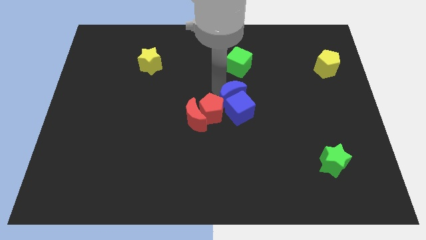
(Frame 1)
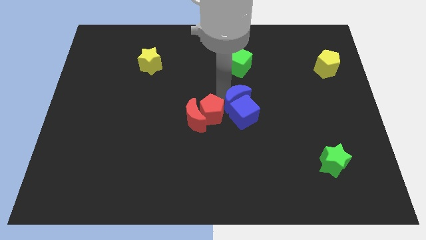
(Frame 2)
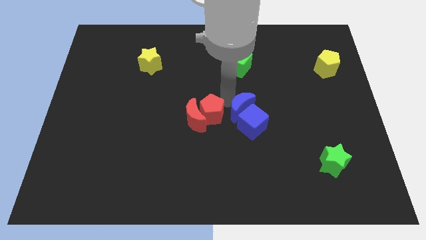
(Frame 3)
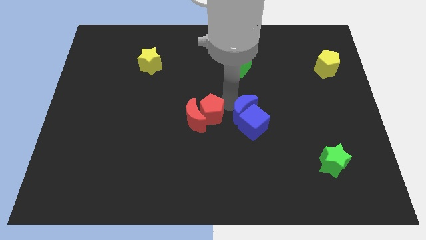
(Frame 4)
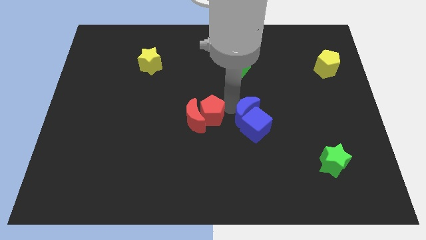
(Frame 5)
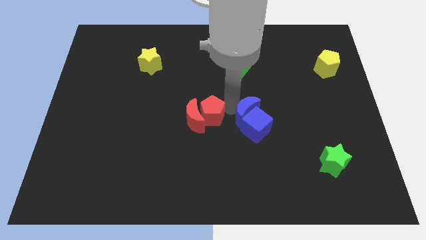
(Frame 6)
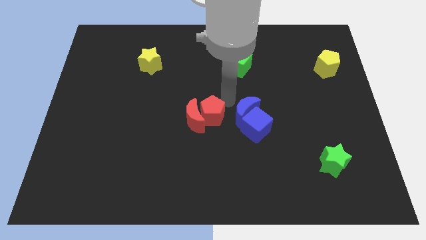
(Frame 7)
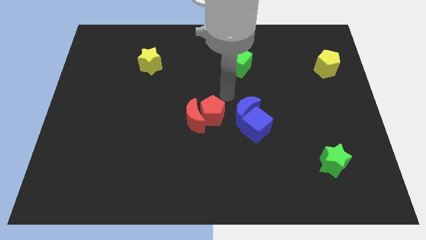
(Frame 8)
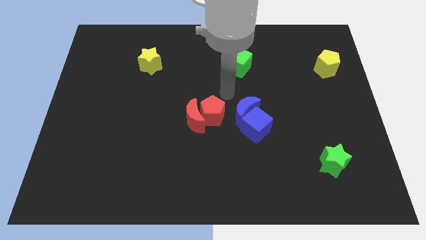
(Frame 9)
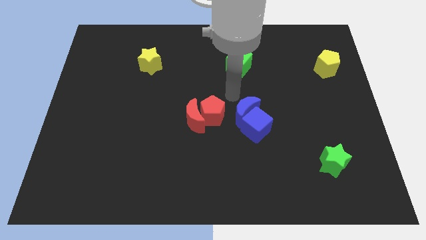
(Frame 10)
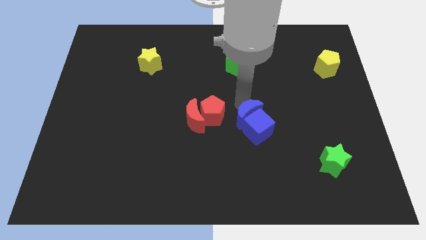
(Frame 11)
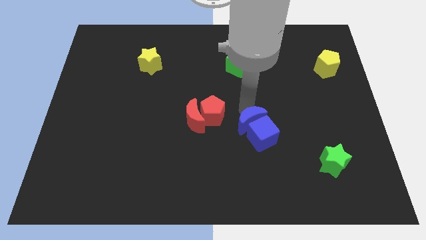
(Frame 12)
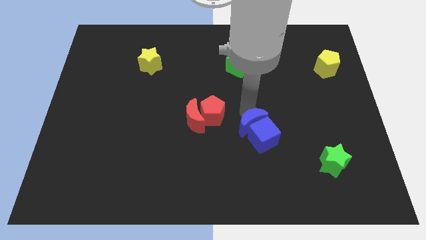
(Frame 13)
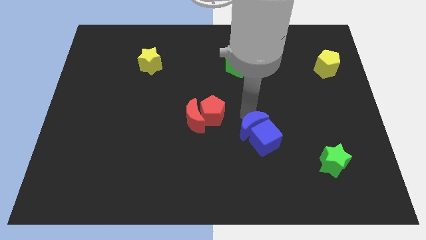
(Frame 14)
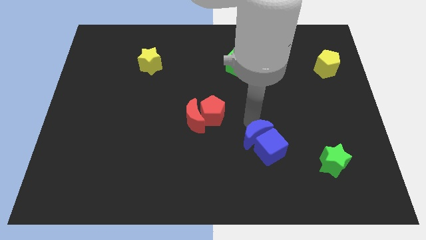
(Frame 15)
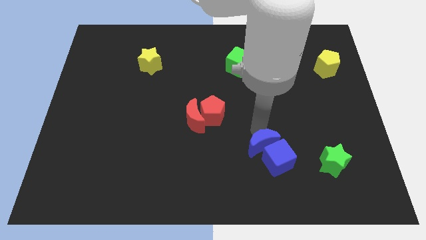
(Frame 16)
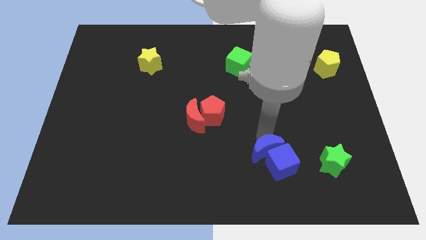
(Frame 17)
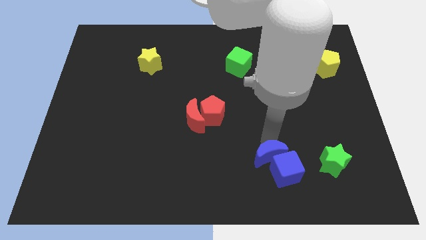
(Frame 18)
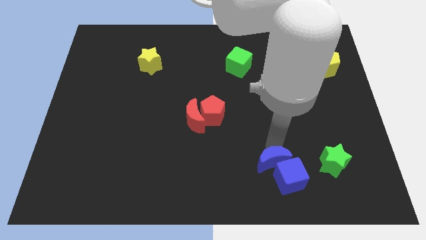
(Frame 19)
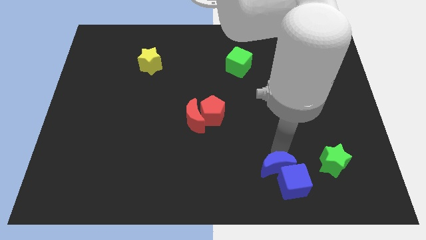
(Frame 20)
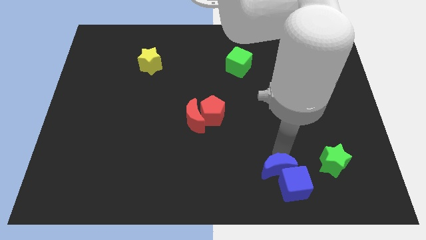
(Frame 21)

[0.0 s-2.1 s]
separate blue blocks from red blocks

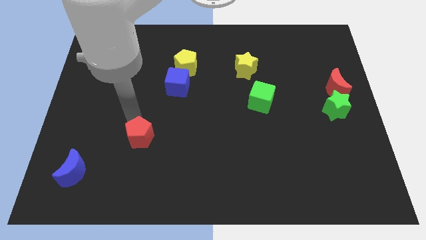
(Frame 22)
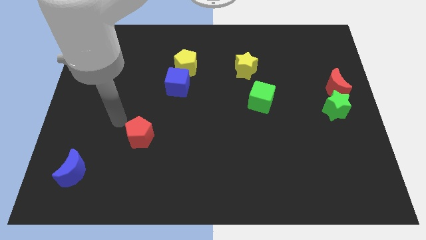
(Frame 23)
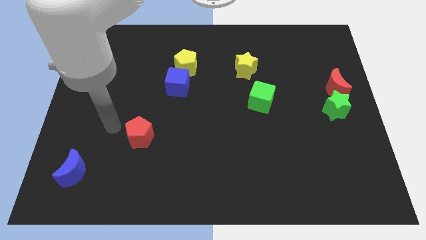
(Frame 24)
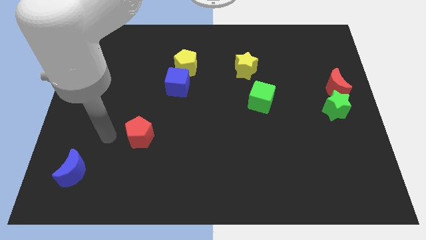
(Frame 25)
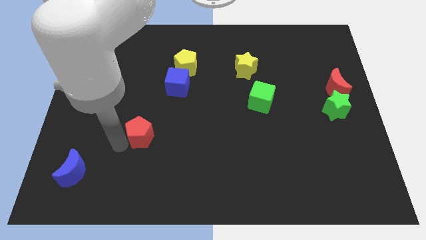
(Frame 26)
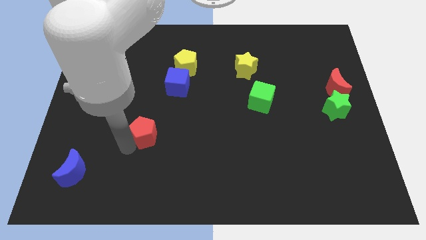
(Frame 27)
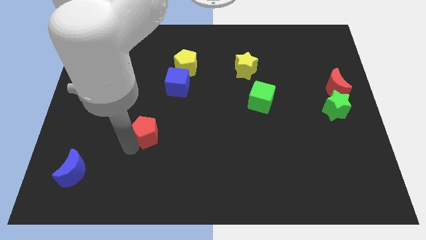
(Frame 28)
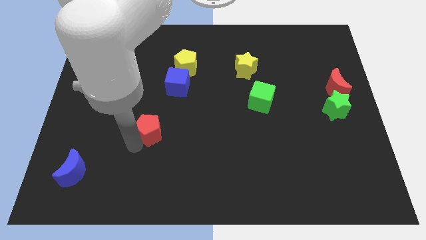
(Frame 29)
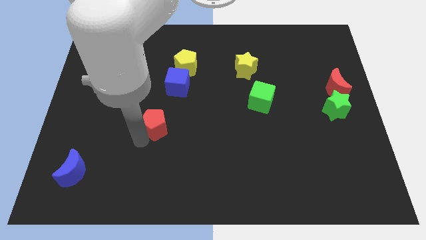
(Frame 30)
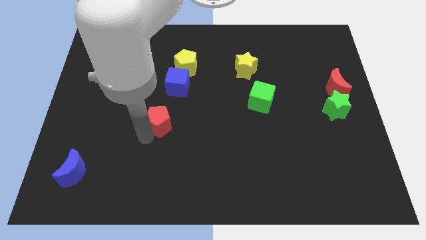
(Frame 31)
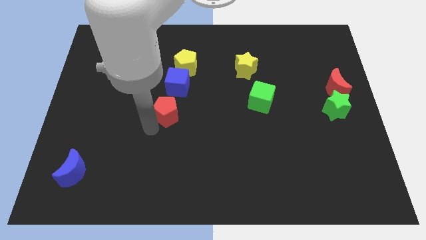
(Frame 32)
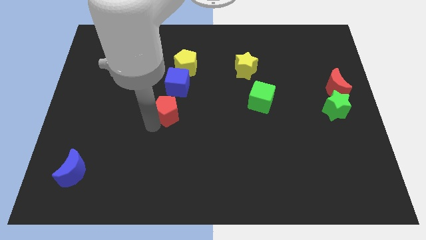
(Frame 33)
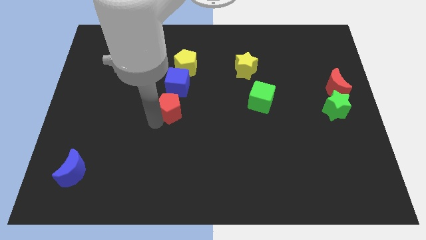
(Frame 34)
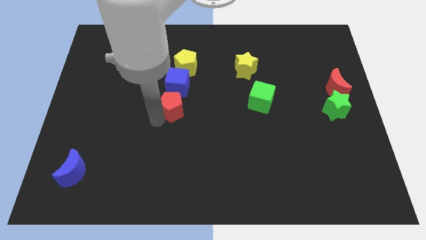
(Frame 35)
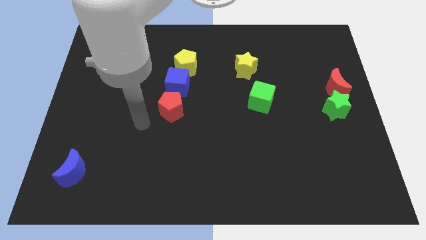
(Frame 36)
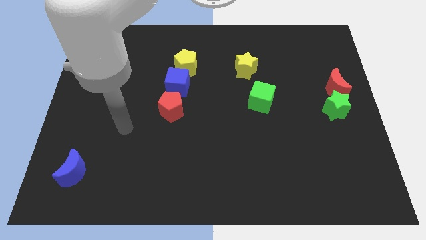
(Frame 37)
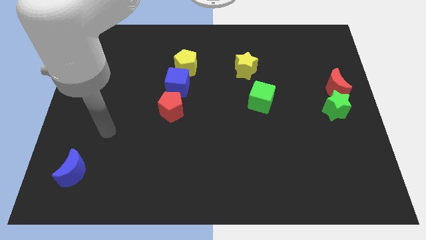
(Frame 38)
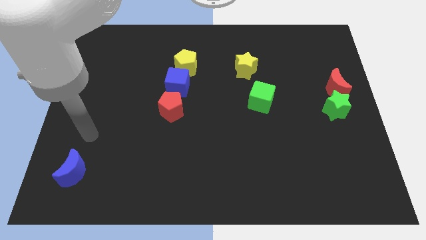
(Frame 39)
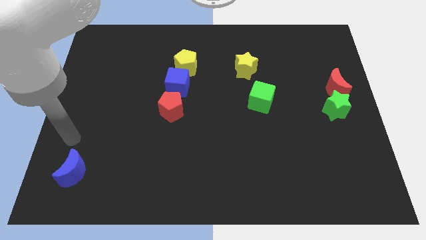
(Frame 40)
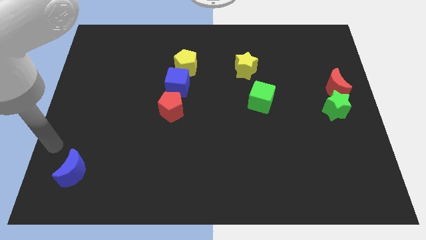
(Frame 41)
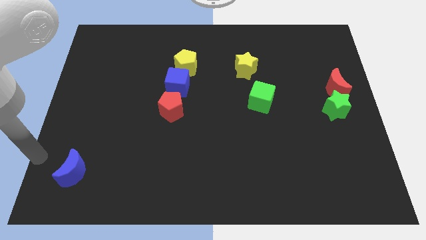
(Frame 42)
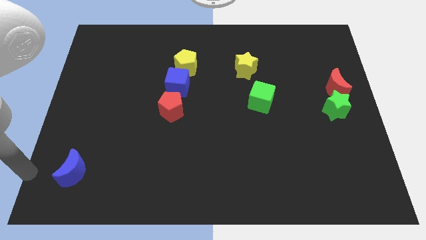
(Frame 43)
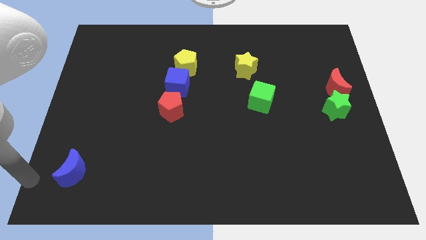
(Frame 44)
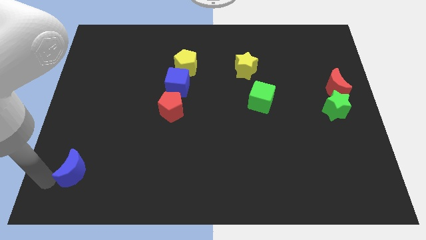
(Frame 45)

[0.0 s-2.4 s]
place the arm near the blue moon

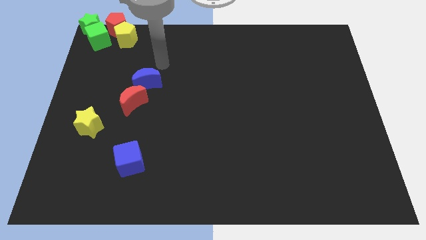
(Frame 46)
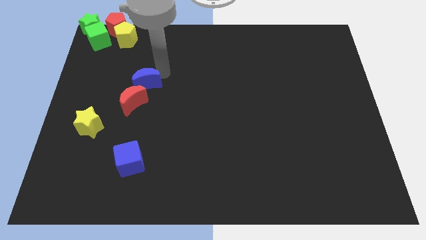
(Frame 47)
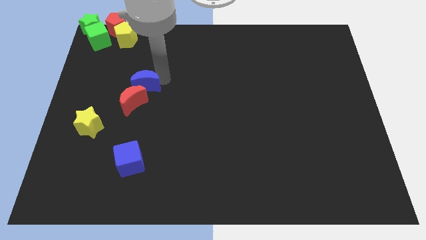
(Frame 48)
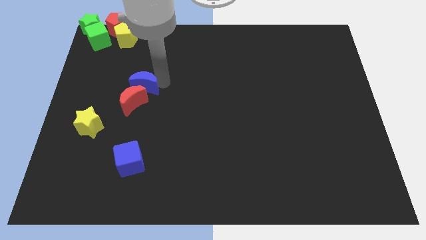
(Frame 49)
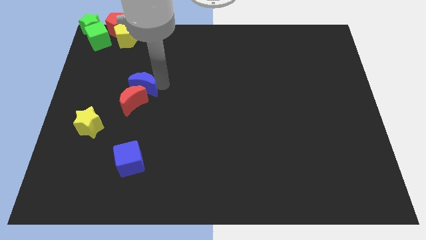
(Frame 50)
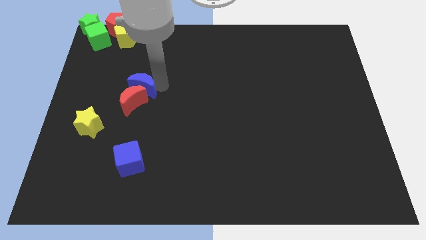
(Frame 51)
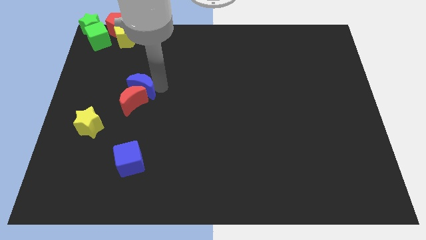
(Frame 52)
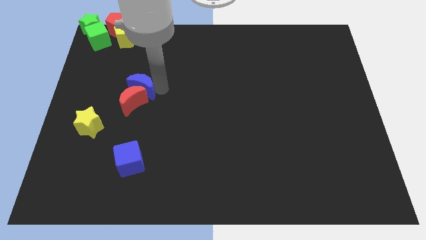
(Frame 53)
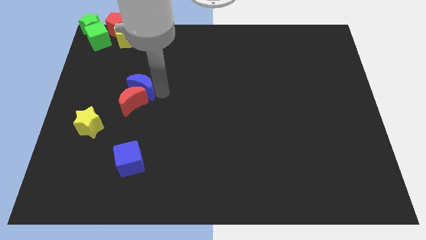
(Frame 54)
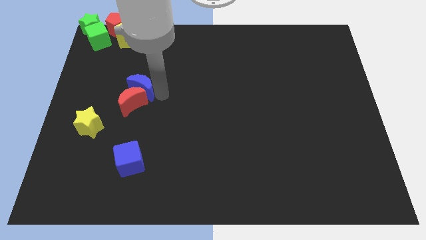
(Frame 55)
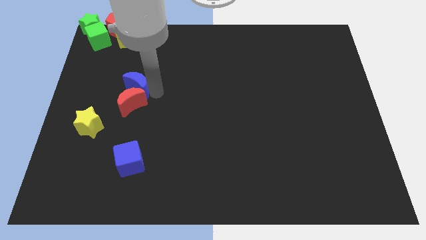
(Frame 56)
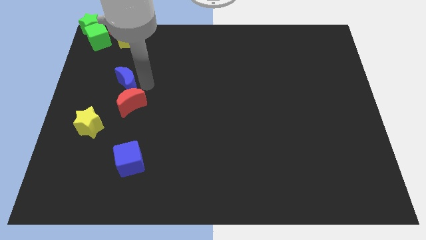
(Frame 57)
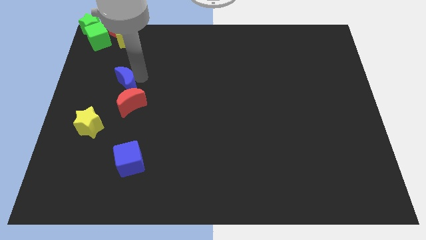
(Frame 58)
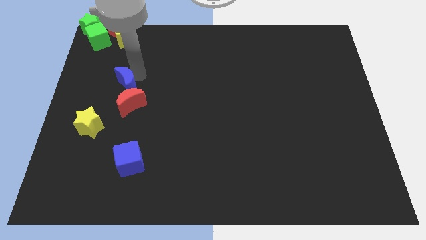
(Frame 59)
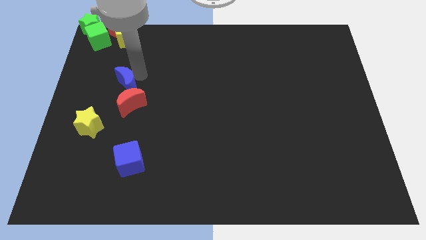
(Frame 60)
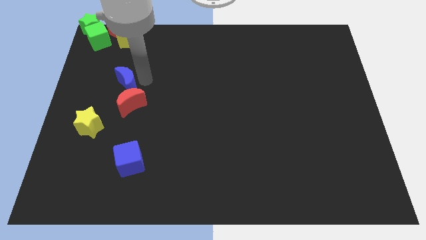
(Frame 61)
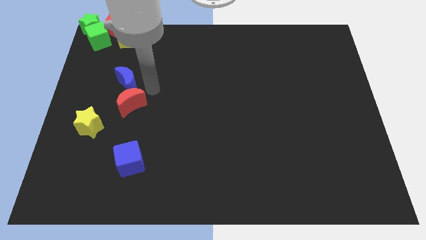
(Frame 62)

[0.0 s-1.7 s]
move the blue crescent above to the red crescent

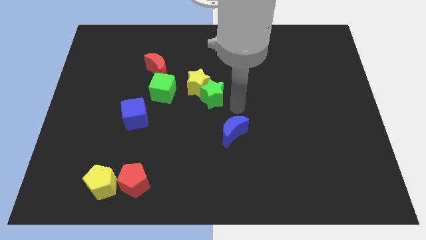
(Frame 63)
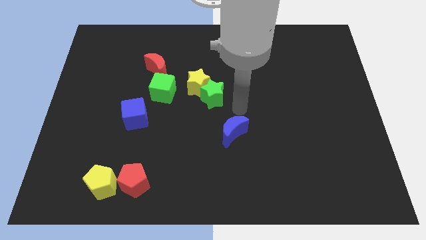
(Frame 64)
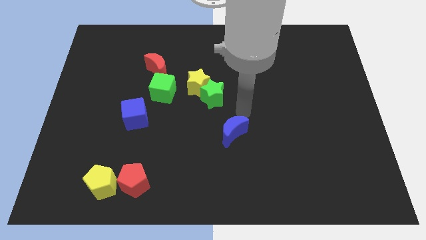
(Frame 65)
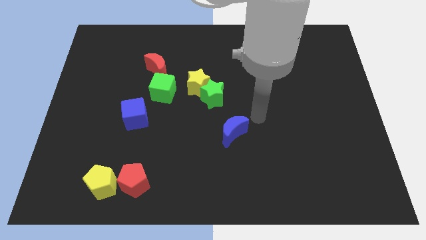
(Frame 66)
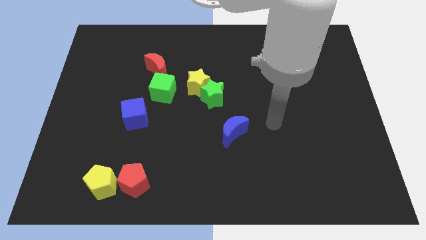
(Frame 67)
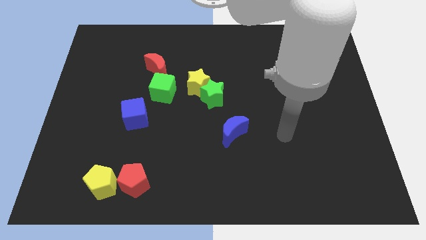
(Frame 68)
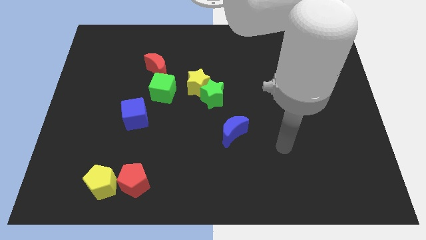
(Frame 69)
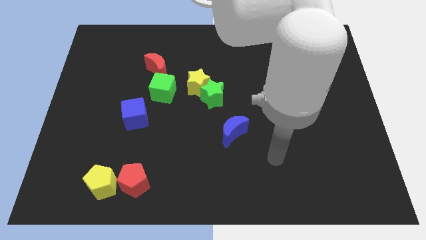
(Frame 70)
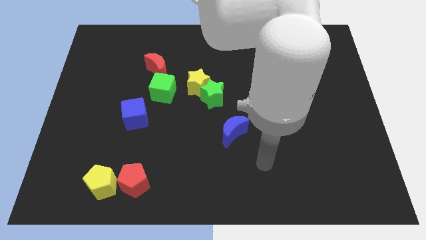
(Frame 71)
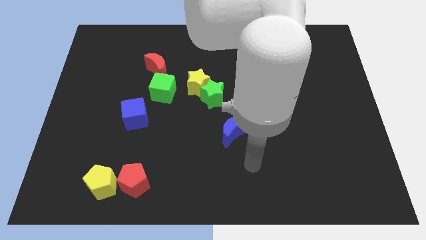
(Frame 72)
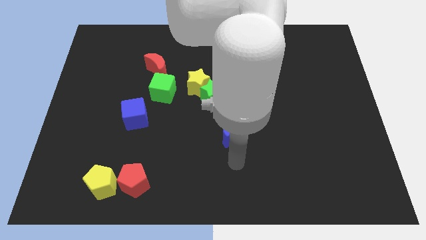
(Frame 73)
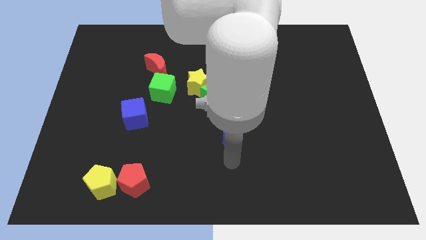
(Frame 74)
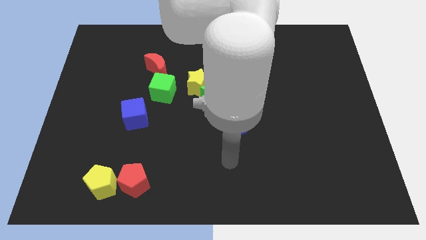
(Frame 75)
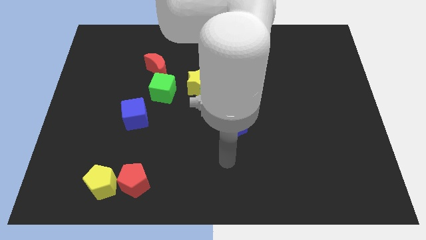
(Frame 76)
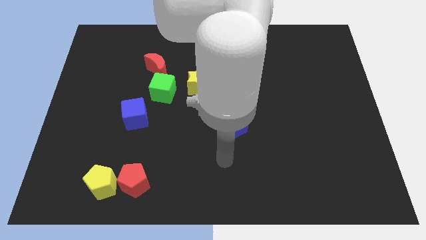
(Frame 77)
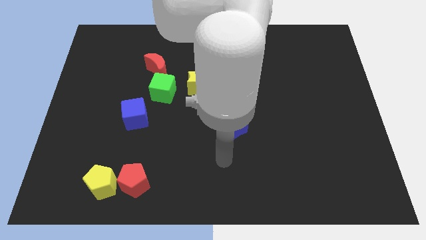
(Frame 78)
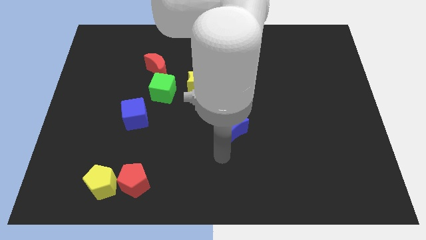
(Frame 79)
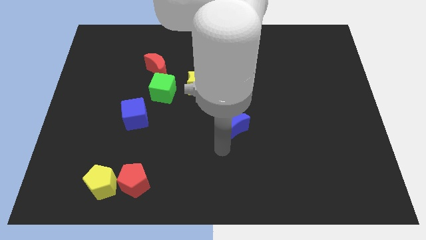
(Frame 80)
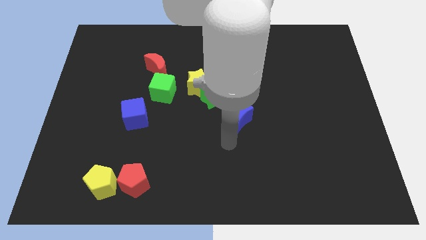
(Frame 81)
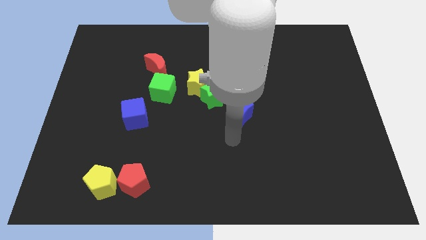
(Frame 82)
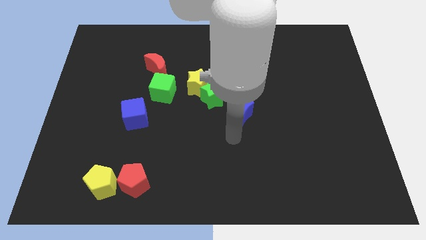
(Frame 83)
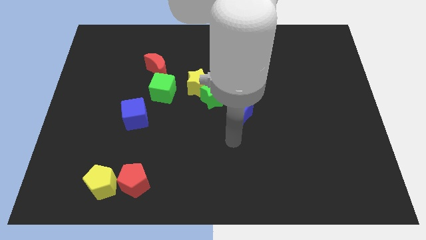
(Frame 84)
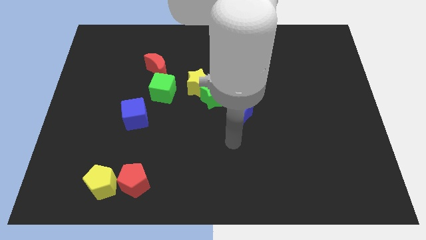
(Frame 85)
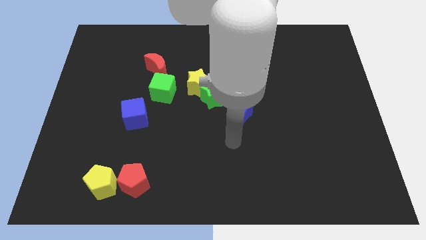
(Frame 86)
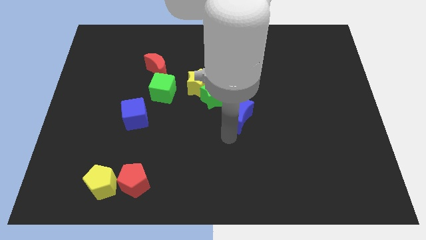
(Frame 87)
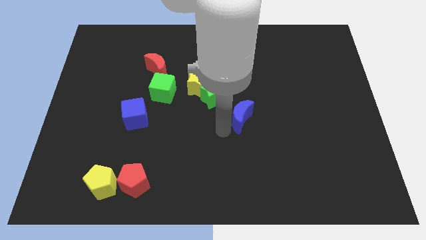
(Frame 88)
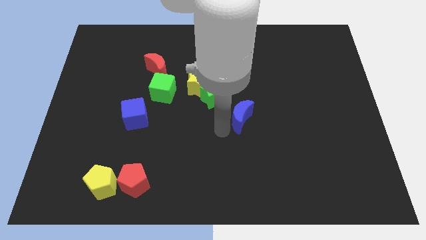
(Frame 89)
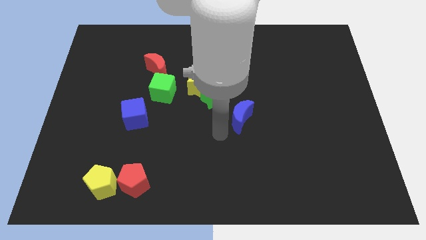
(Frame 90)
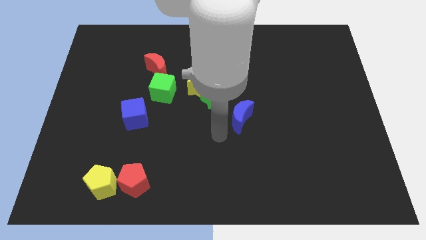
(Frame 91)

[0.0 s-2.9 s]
place the blue crescent at the bottom right side of green star
